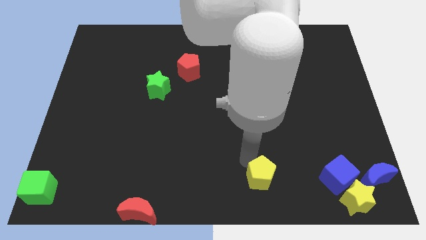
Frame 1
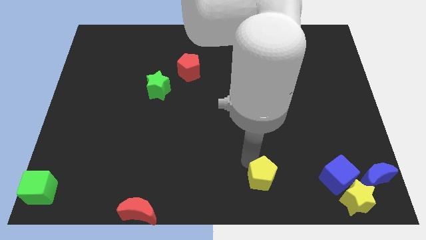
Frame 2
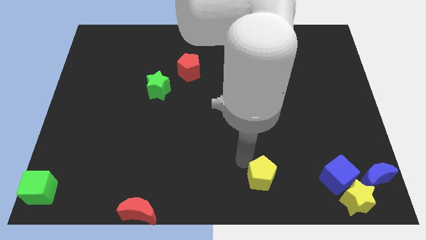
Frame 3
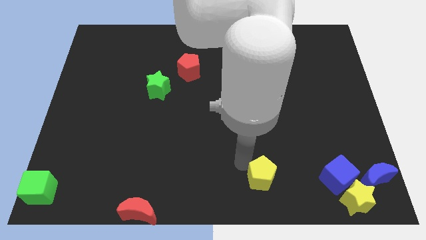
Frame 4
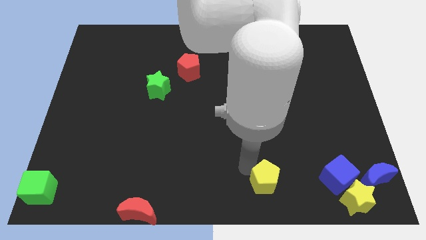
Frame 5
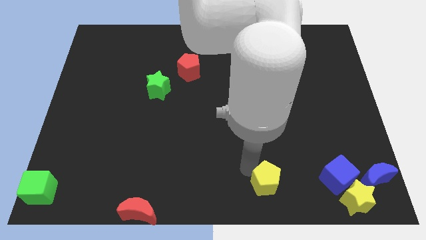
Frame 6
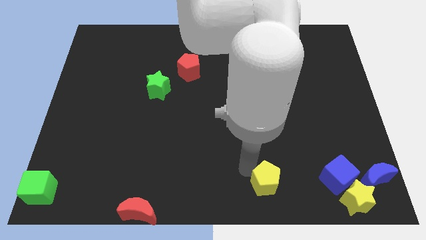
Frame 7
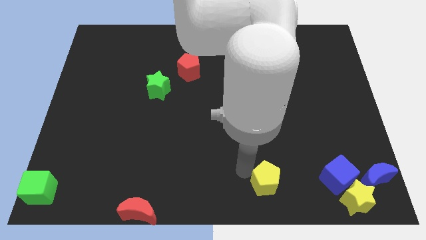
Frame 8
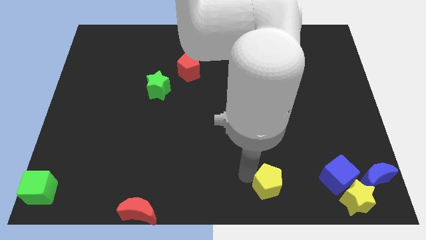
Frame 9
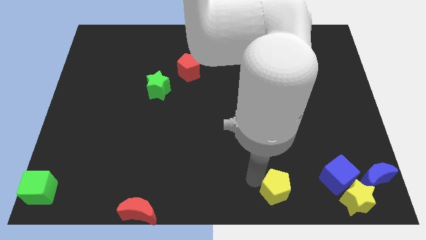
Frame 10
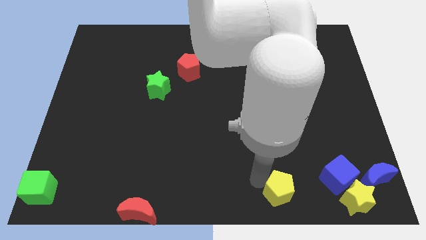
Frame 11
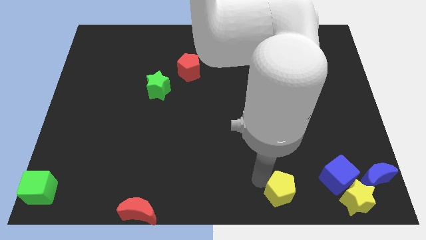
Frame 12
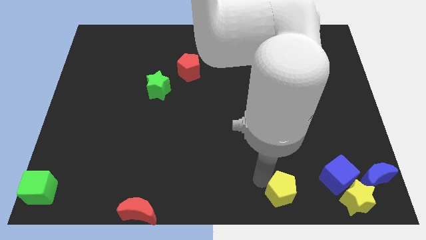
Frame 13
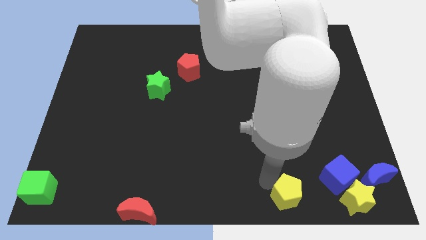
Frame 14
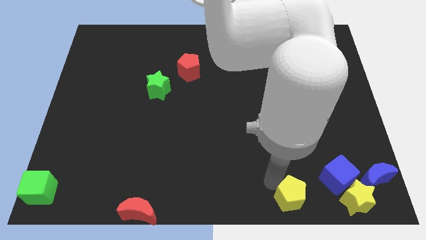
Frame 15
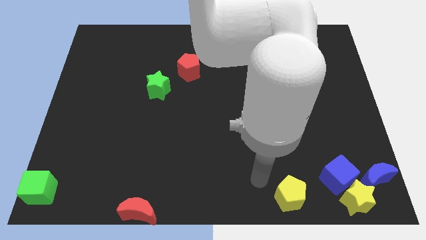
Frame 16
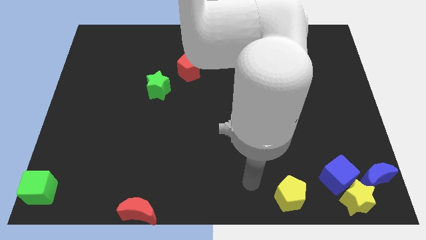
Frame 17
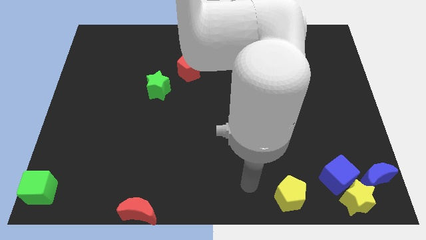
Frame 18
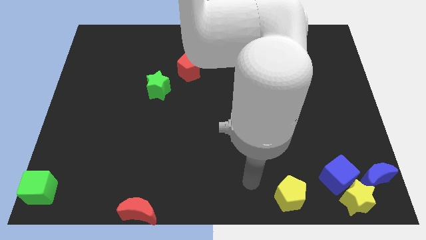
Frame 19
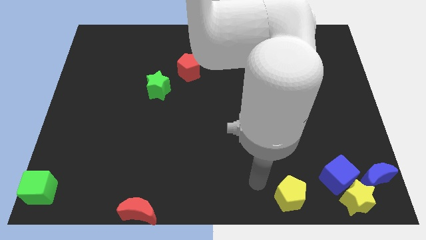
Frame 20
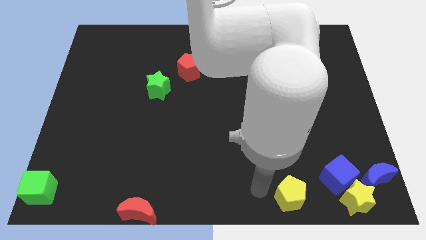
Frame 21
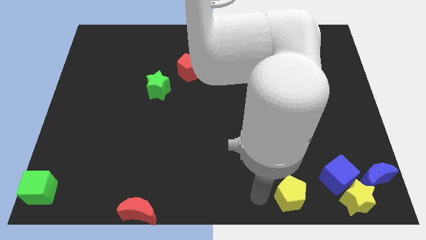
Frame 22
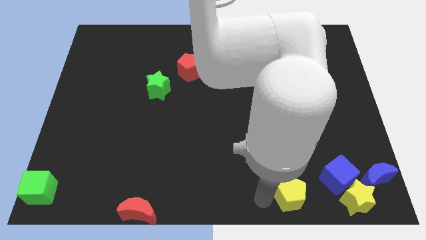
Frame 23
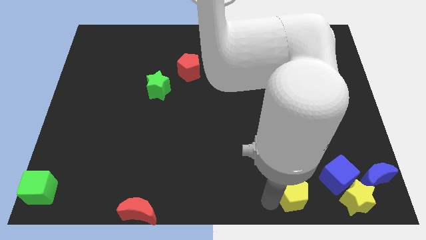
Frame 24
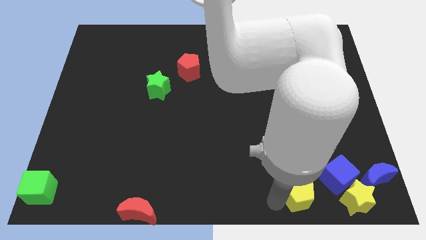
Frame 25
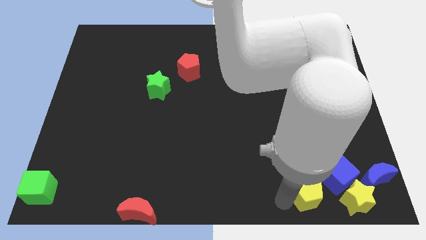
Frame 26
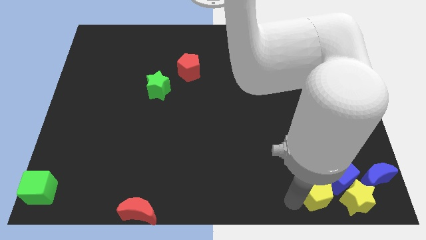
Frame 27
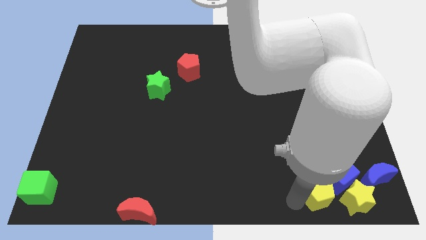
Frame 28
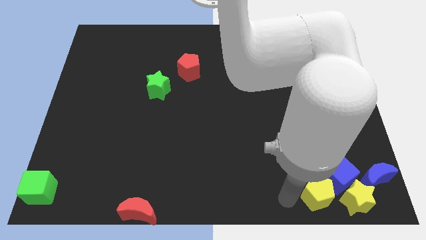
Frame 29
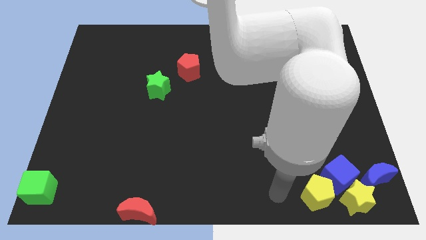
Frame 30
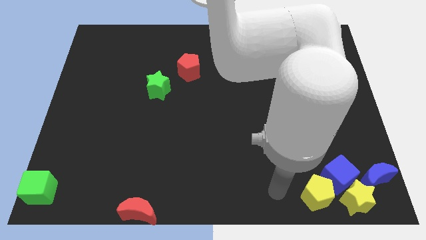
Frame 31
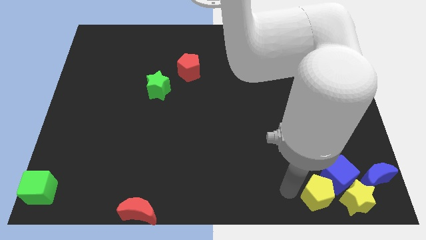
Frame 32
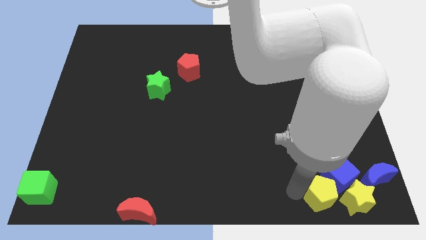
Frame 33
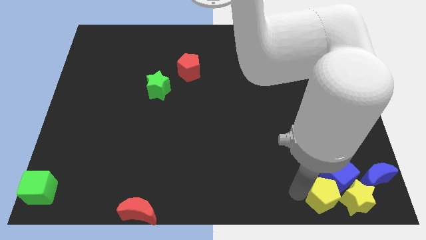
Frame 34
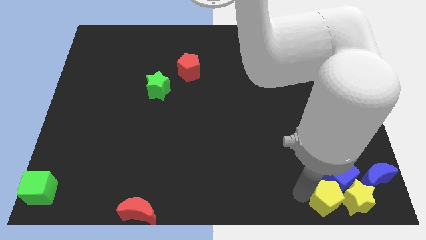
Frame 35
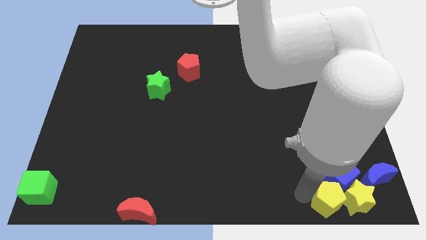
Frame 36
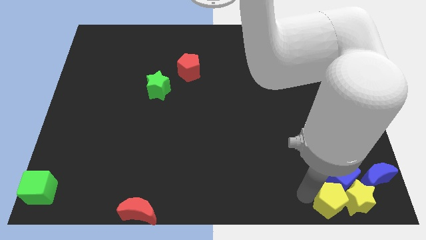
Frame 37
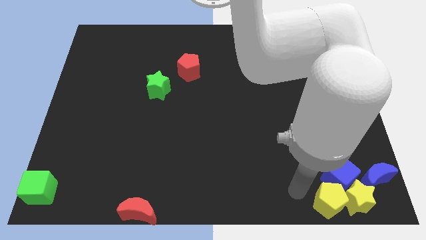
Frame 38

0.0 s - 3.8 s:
move yellow pentagon towards blue cube

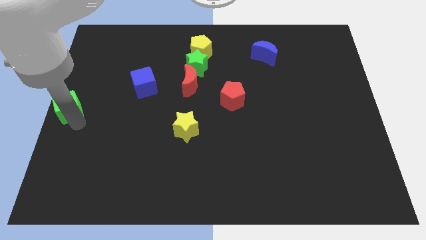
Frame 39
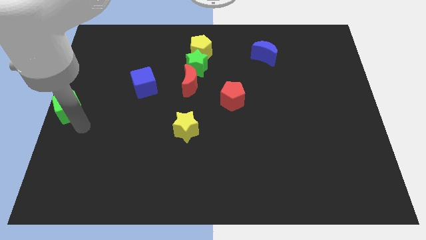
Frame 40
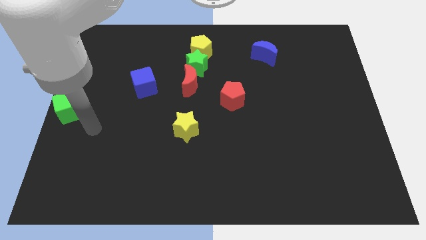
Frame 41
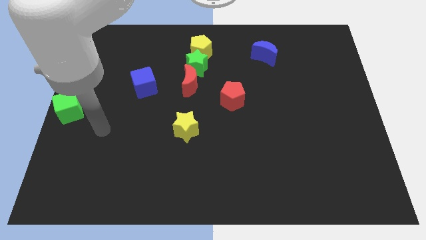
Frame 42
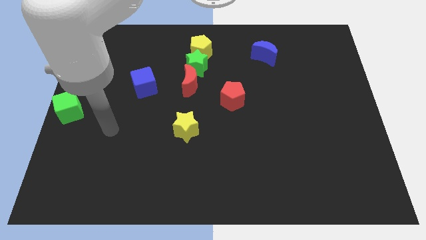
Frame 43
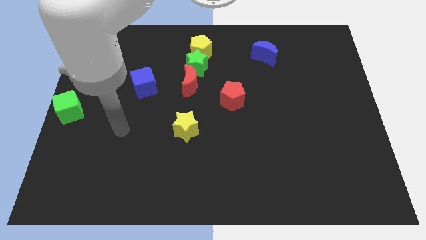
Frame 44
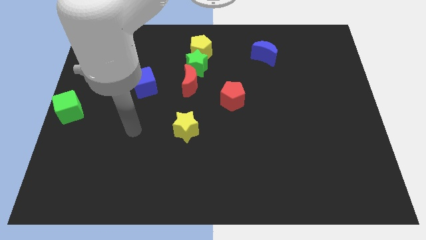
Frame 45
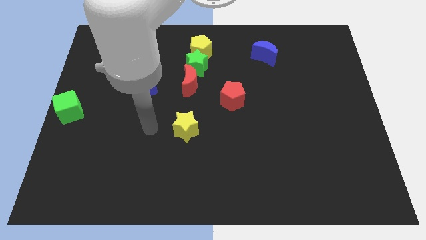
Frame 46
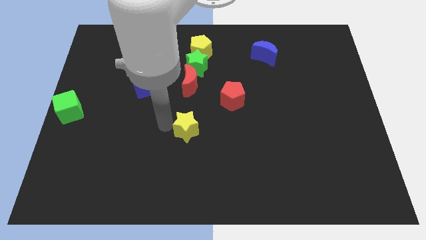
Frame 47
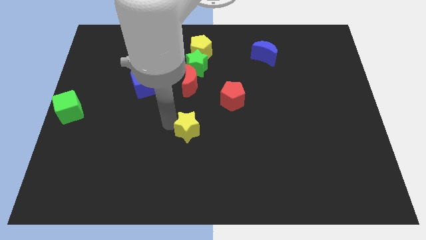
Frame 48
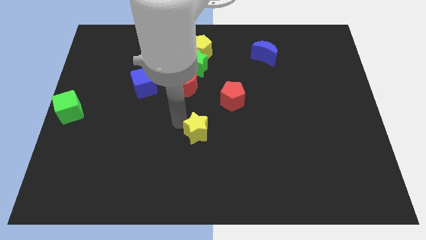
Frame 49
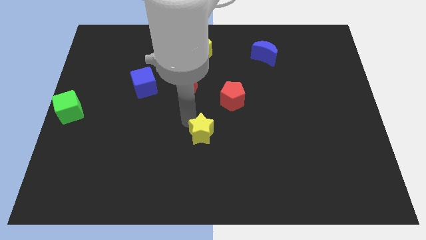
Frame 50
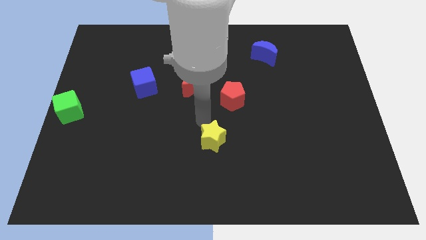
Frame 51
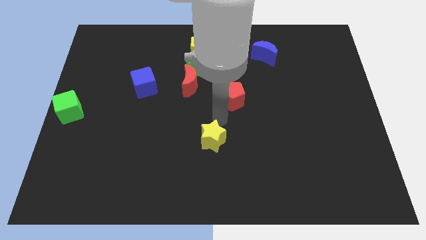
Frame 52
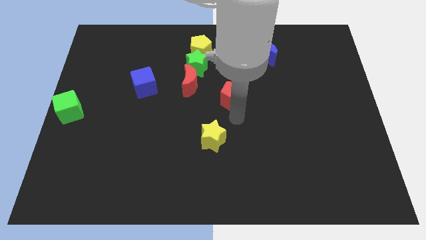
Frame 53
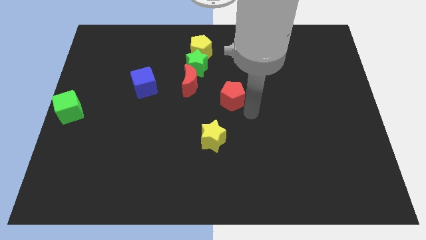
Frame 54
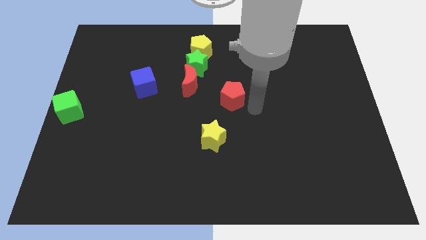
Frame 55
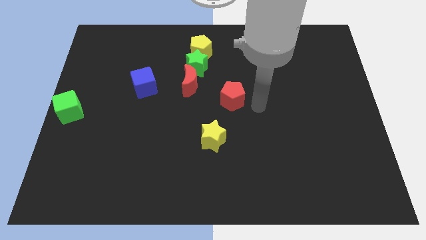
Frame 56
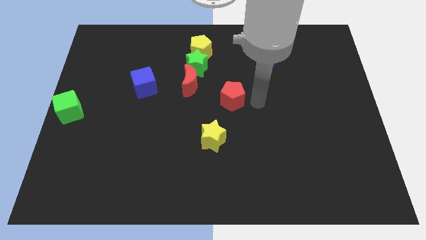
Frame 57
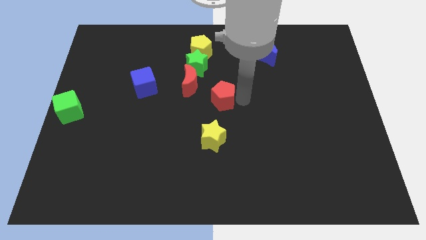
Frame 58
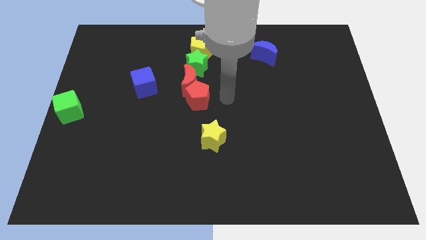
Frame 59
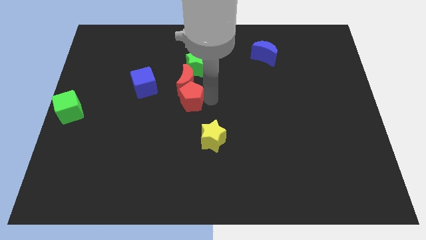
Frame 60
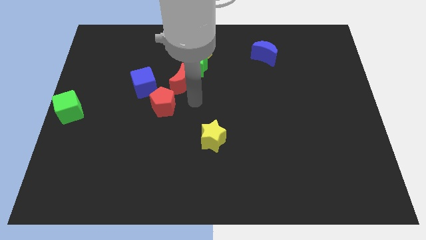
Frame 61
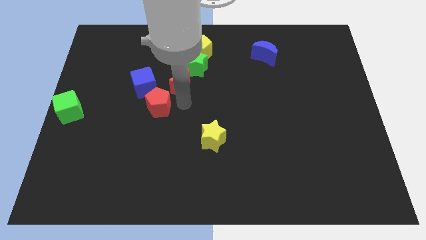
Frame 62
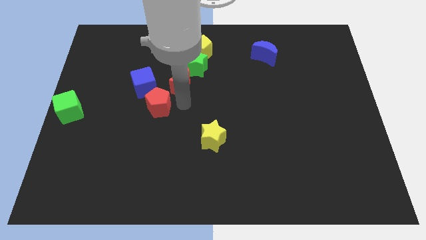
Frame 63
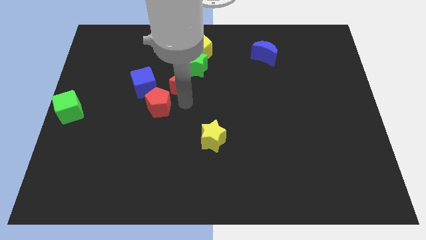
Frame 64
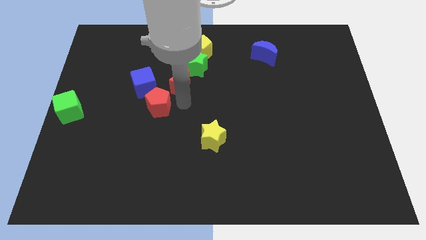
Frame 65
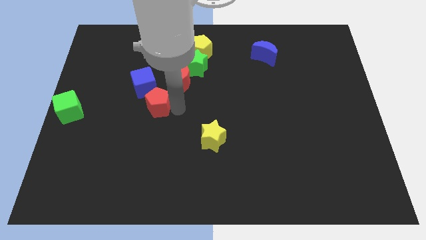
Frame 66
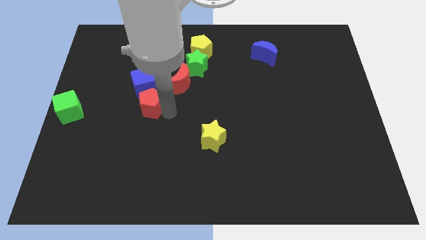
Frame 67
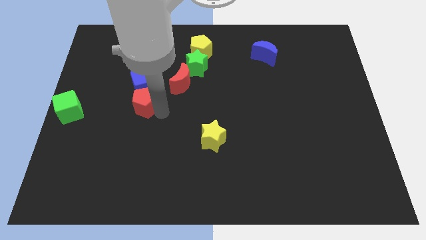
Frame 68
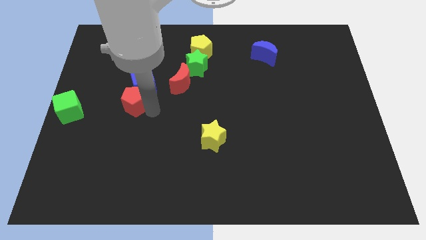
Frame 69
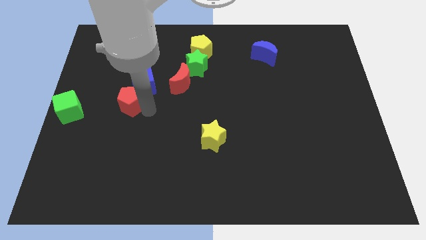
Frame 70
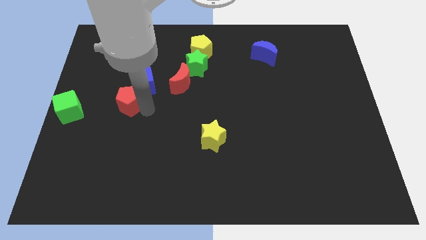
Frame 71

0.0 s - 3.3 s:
push yellow star towards right side of the board

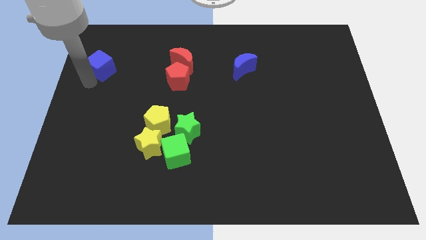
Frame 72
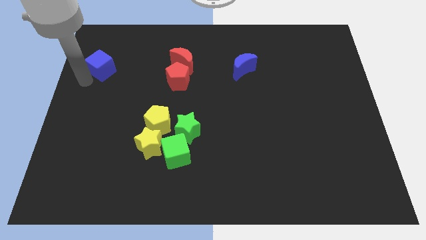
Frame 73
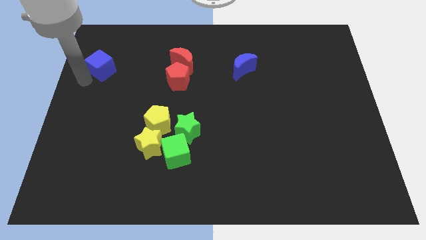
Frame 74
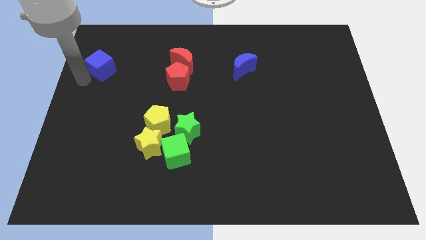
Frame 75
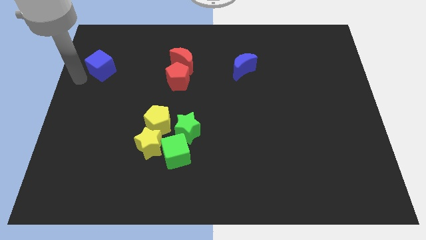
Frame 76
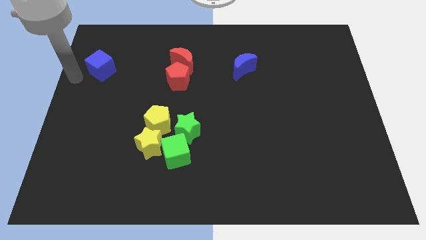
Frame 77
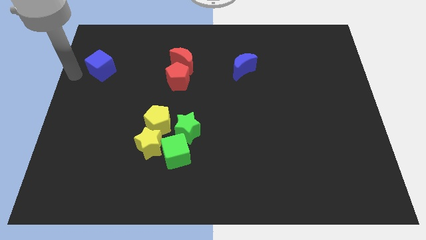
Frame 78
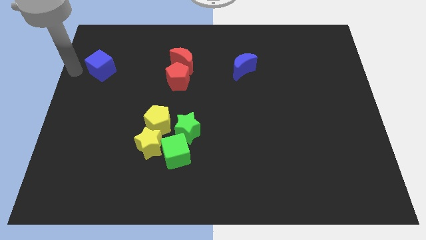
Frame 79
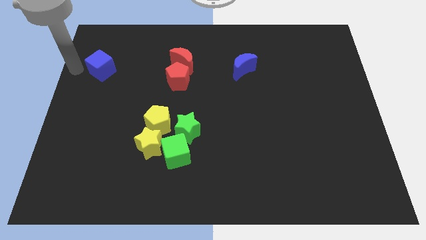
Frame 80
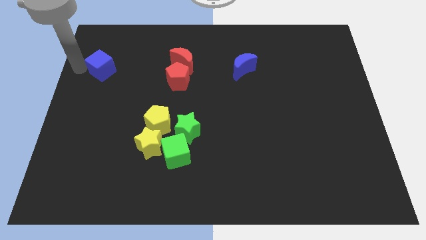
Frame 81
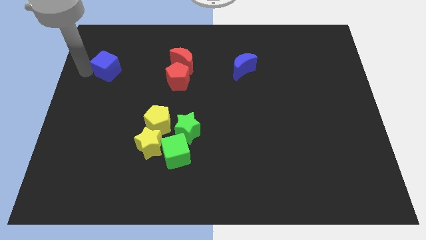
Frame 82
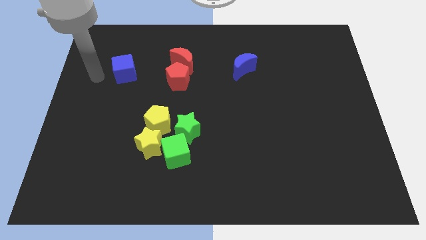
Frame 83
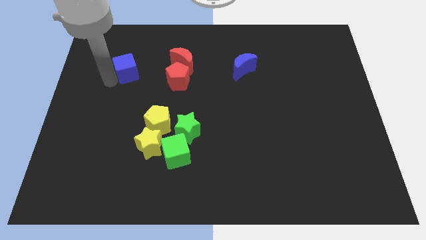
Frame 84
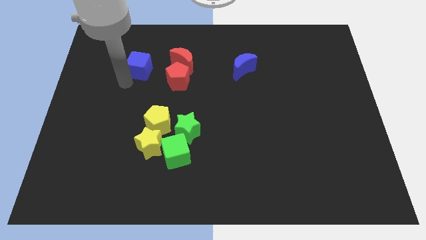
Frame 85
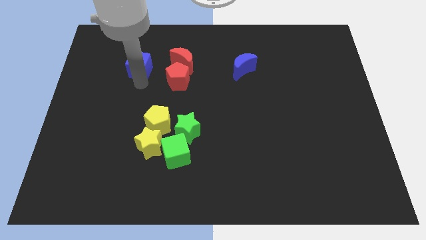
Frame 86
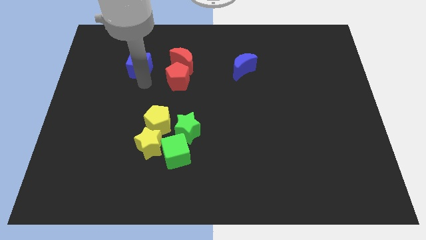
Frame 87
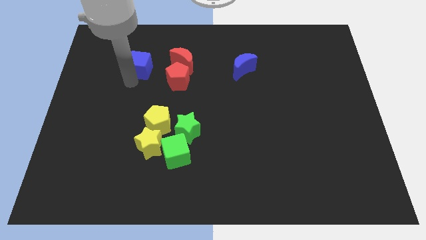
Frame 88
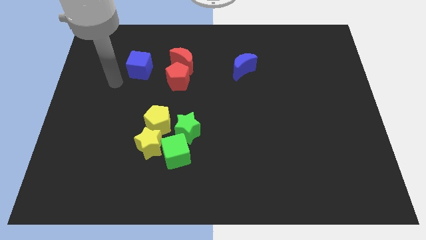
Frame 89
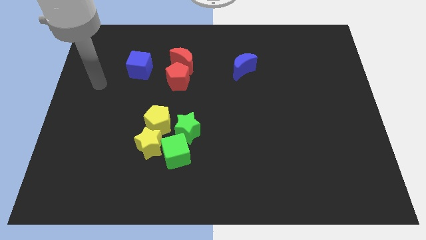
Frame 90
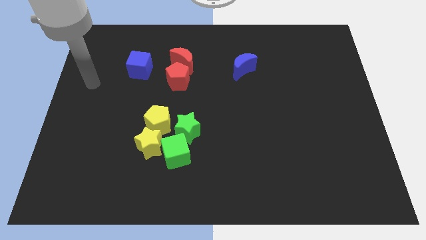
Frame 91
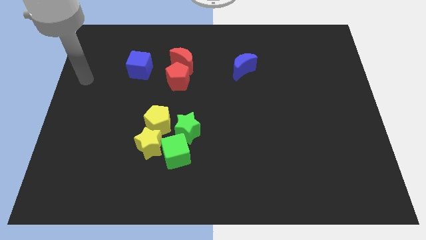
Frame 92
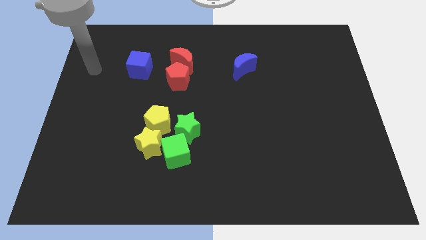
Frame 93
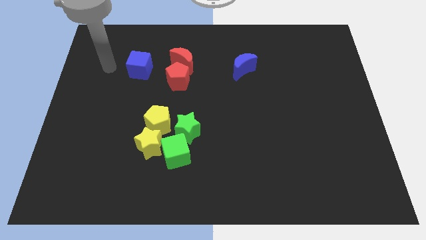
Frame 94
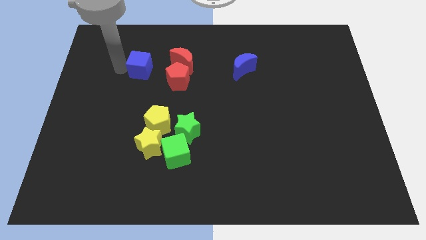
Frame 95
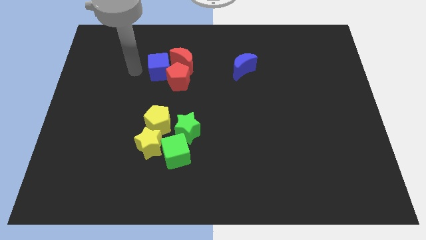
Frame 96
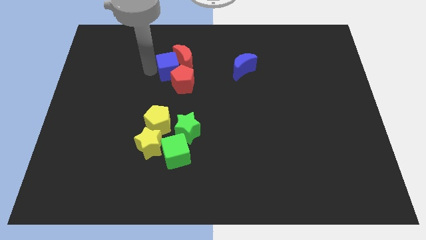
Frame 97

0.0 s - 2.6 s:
place blue cube above yellow pentagon
